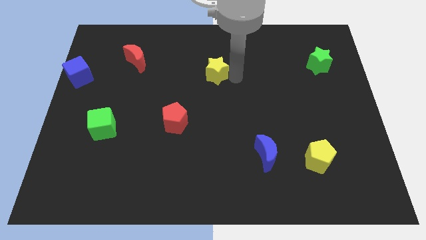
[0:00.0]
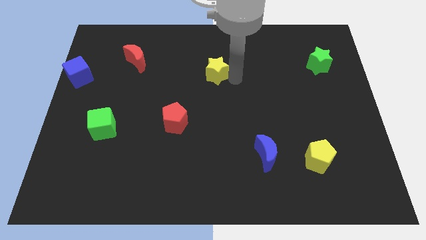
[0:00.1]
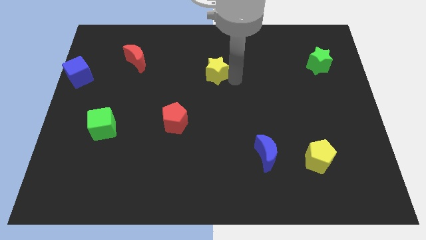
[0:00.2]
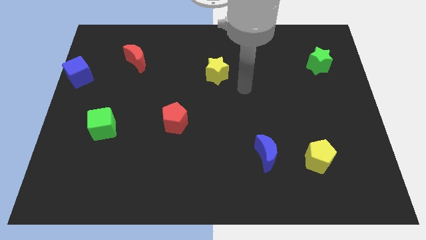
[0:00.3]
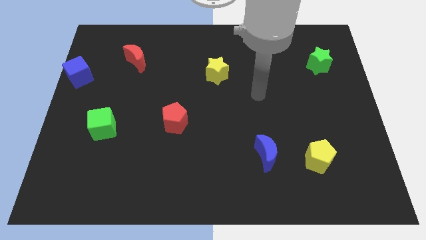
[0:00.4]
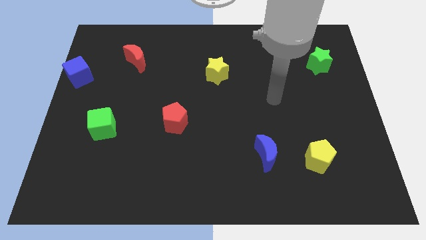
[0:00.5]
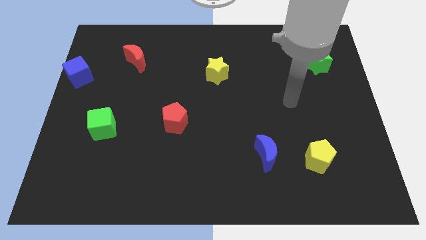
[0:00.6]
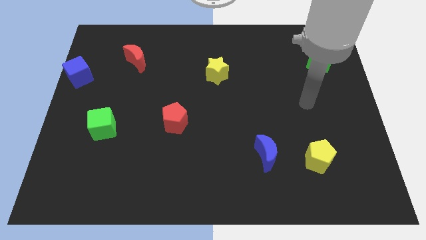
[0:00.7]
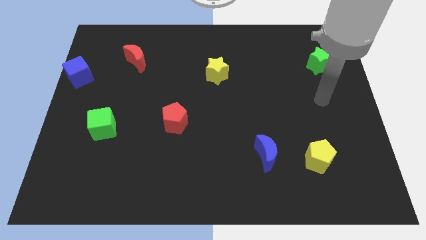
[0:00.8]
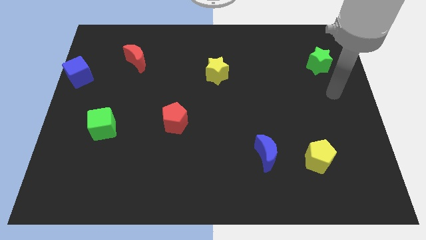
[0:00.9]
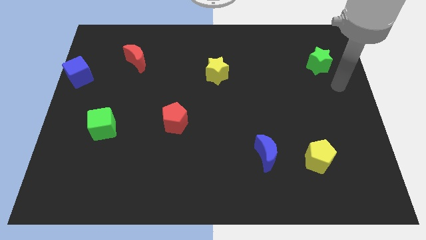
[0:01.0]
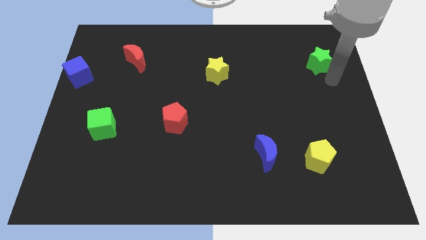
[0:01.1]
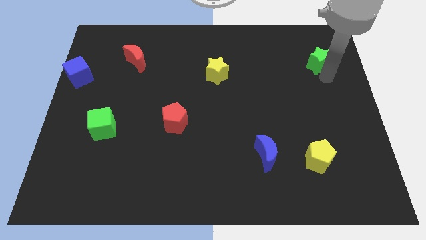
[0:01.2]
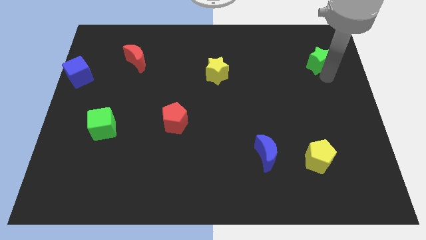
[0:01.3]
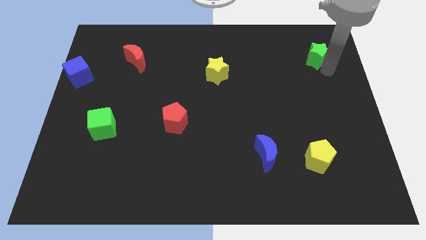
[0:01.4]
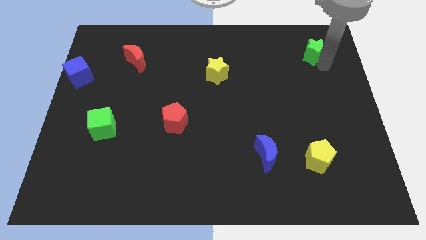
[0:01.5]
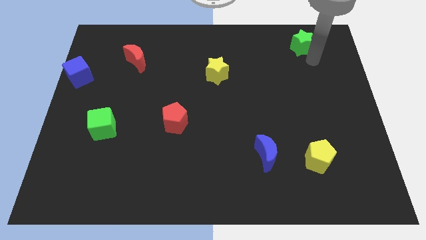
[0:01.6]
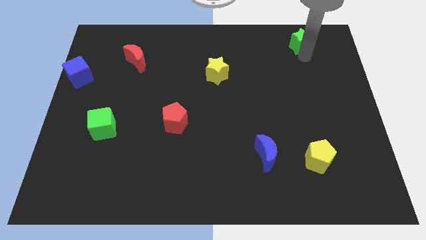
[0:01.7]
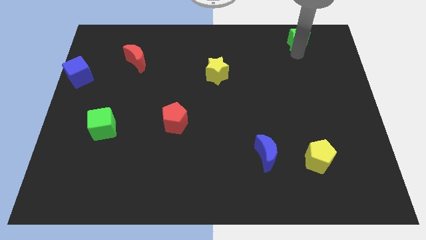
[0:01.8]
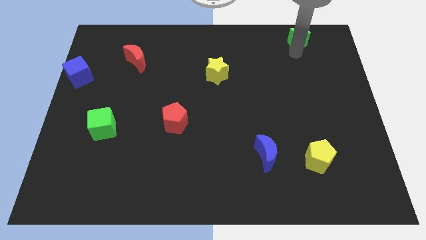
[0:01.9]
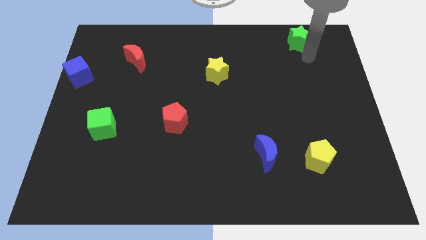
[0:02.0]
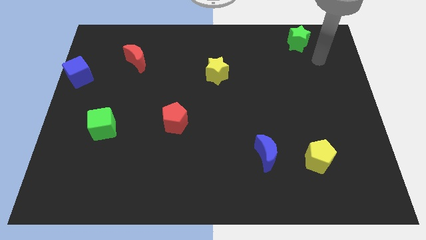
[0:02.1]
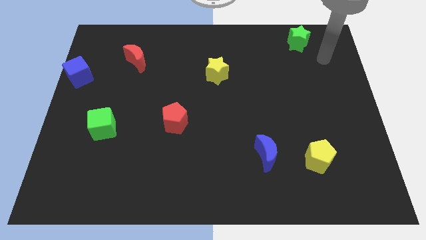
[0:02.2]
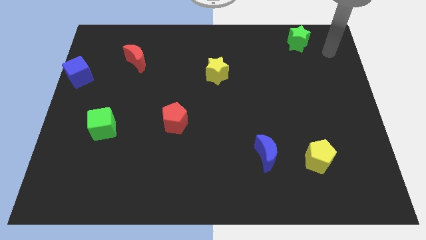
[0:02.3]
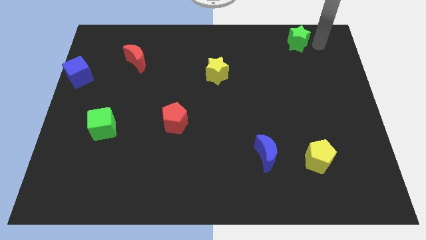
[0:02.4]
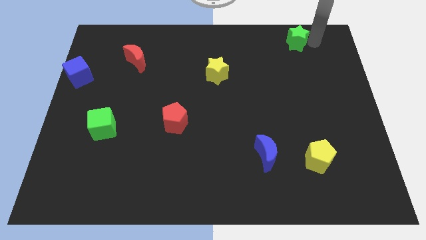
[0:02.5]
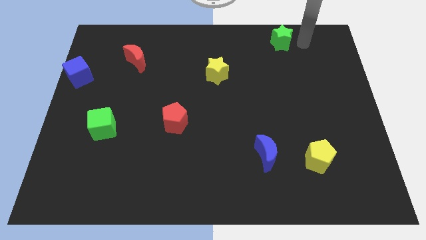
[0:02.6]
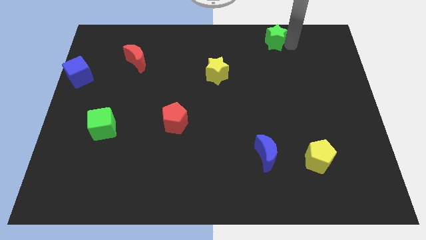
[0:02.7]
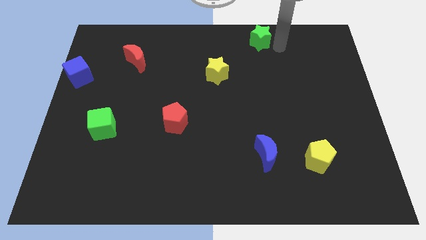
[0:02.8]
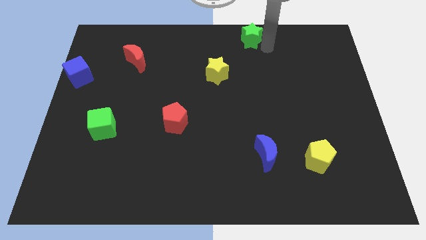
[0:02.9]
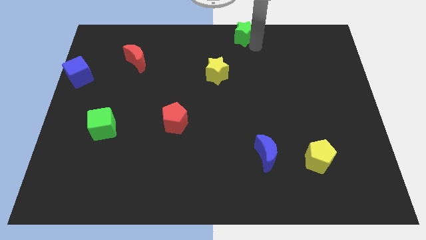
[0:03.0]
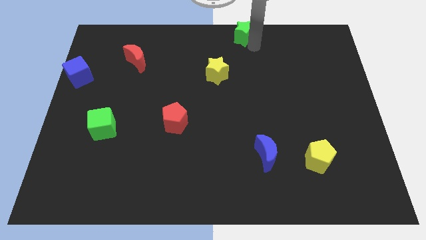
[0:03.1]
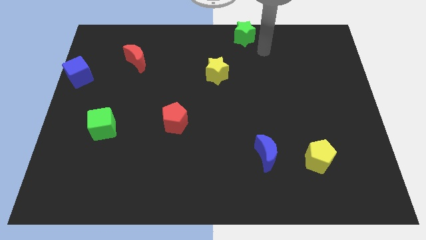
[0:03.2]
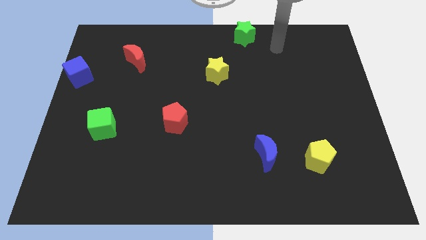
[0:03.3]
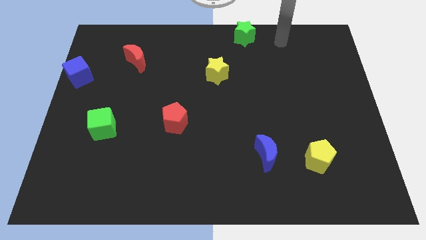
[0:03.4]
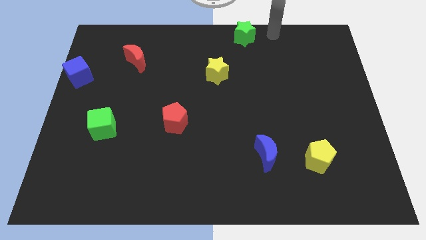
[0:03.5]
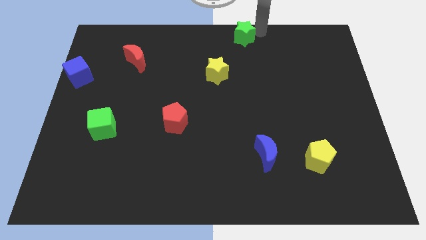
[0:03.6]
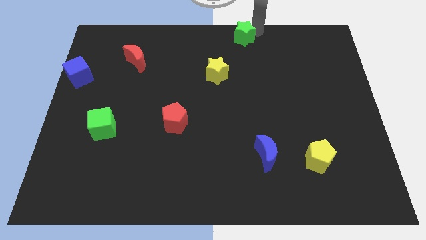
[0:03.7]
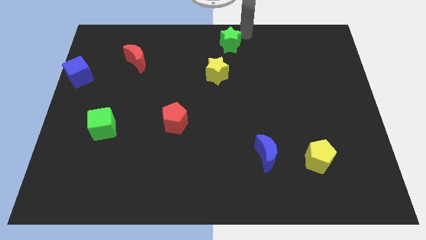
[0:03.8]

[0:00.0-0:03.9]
move the green star to the top right of yellow star

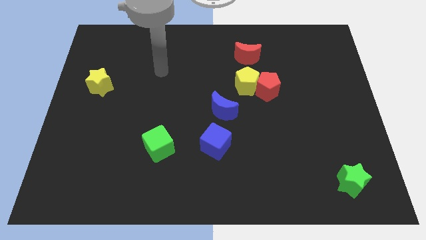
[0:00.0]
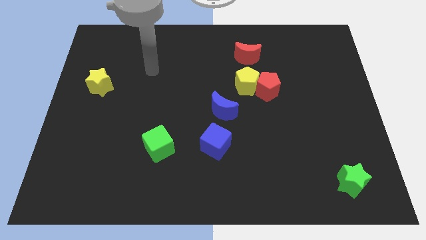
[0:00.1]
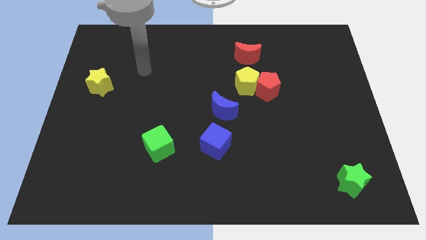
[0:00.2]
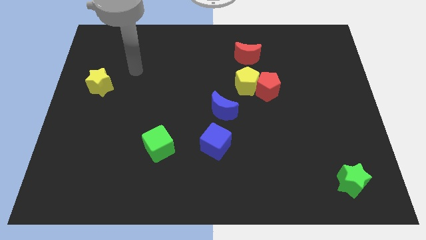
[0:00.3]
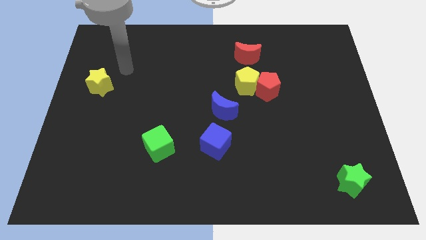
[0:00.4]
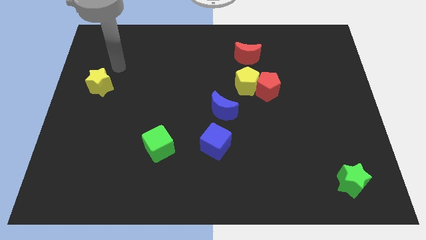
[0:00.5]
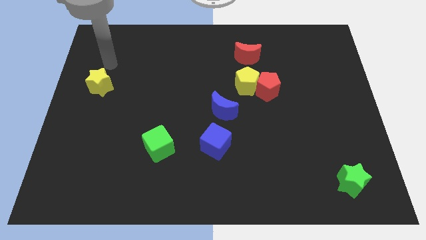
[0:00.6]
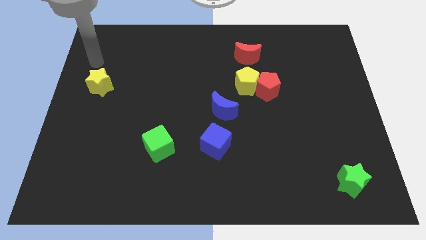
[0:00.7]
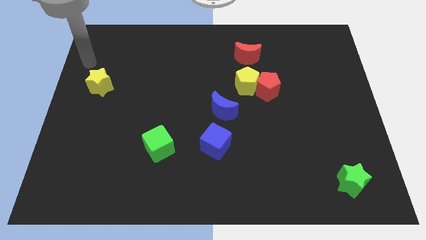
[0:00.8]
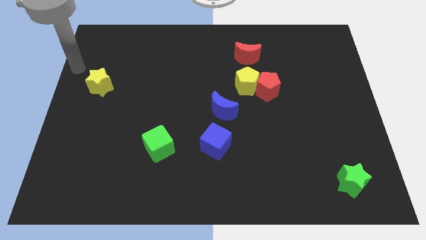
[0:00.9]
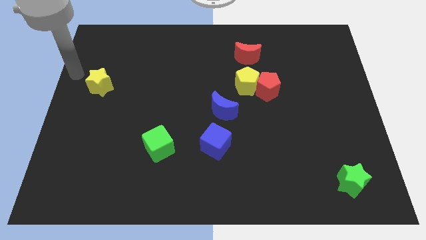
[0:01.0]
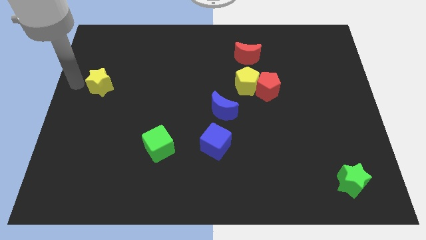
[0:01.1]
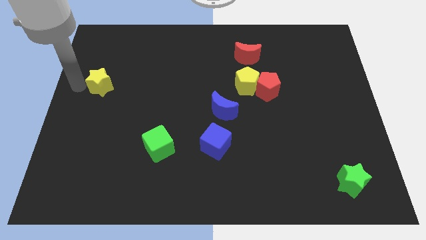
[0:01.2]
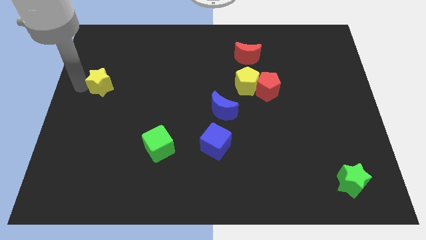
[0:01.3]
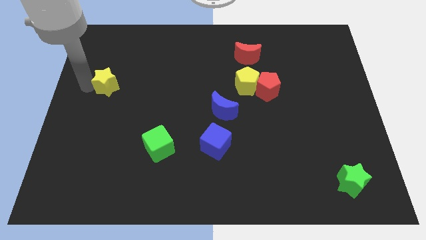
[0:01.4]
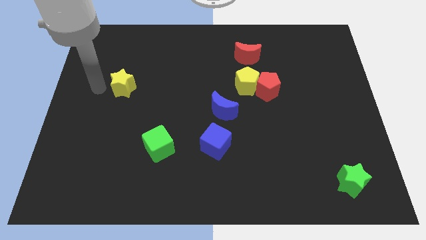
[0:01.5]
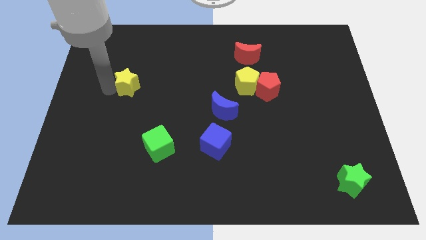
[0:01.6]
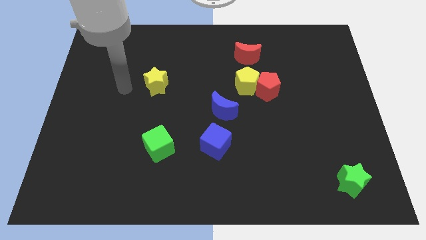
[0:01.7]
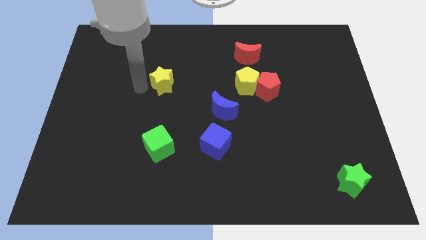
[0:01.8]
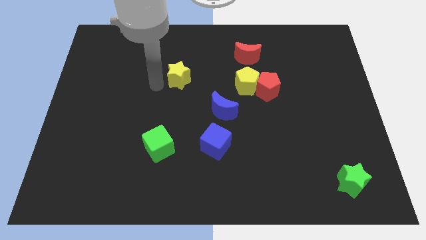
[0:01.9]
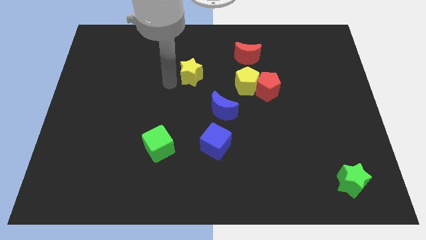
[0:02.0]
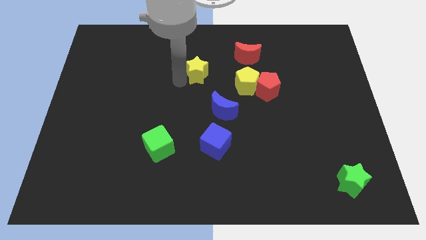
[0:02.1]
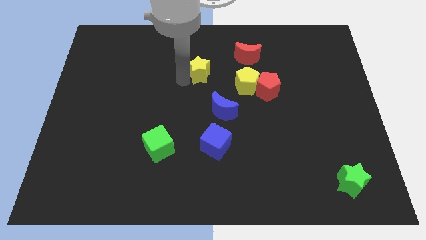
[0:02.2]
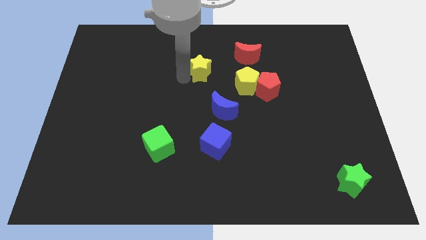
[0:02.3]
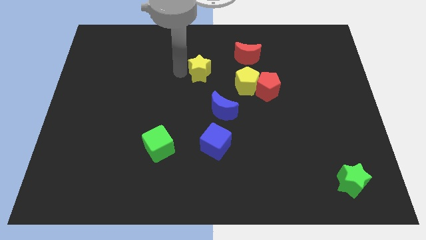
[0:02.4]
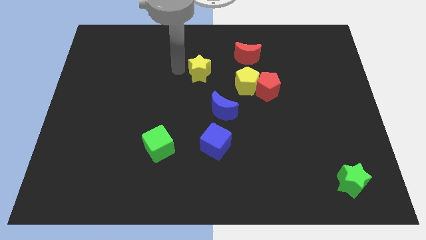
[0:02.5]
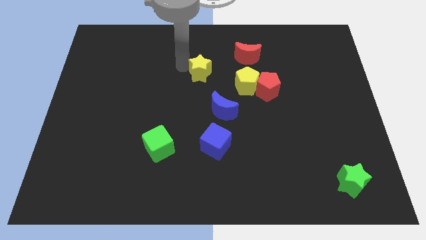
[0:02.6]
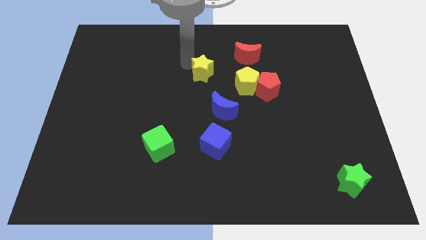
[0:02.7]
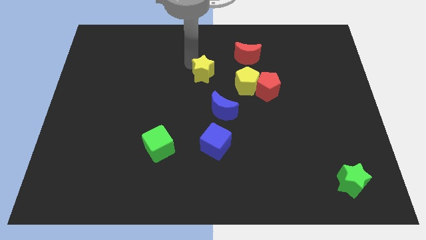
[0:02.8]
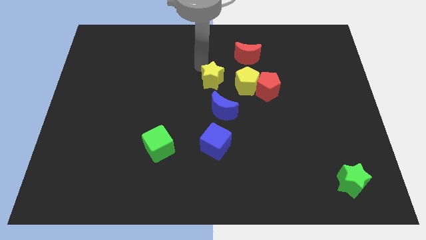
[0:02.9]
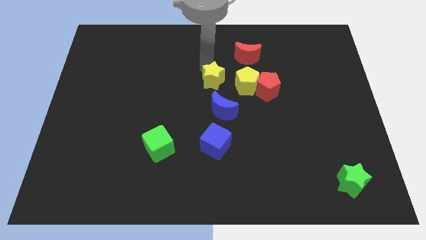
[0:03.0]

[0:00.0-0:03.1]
push the yellow star towards the center of the board

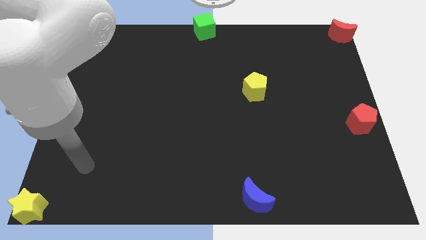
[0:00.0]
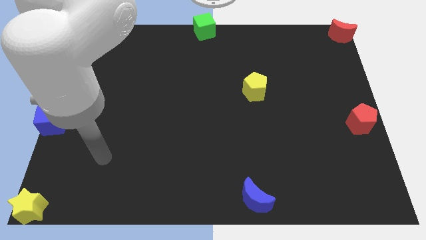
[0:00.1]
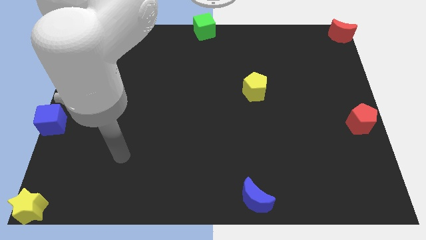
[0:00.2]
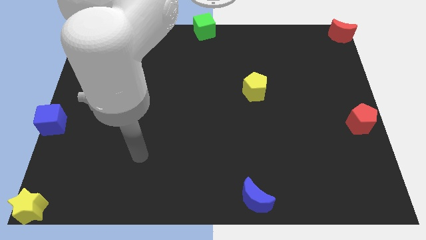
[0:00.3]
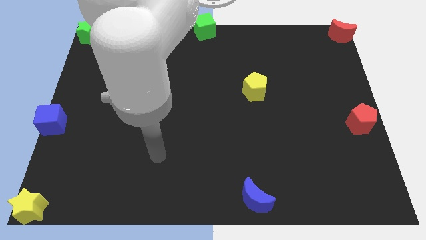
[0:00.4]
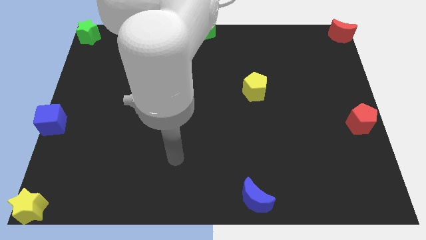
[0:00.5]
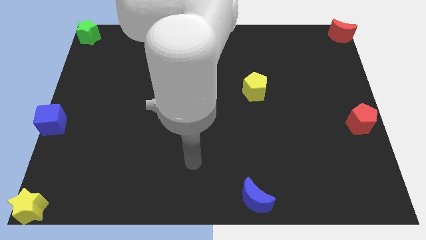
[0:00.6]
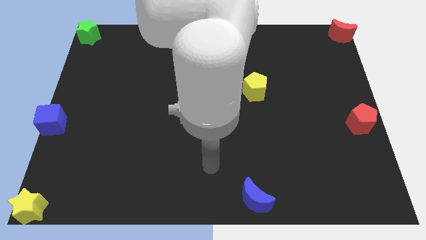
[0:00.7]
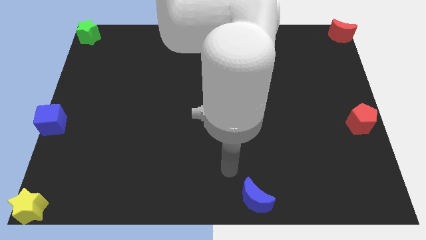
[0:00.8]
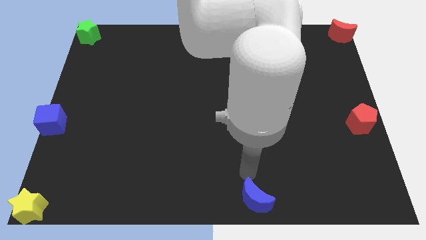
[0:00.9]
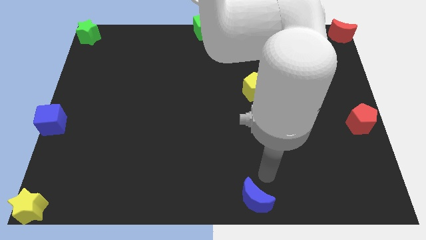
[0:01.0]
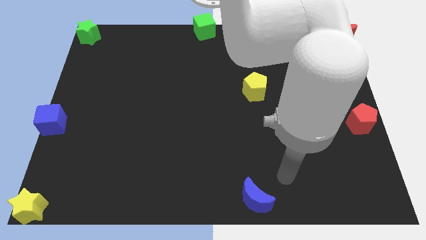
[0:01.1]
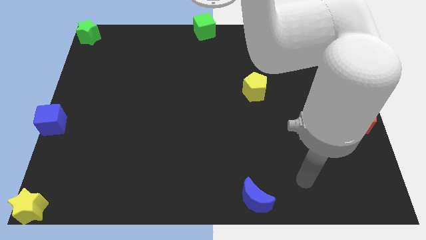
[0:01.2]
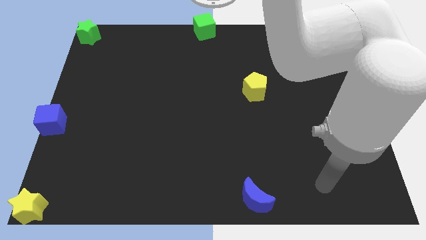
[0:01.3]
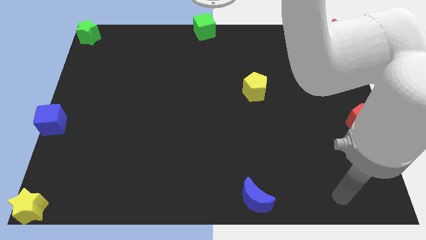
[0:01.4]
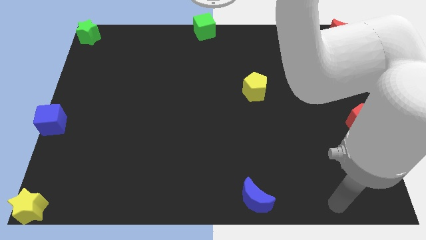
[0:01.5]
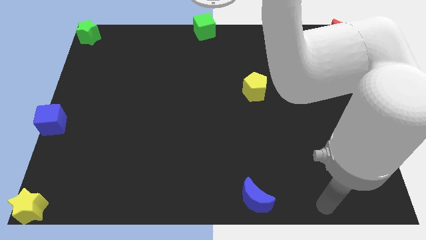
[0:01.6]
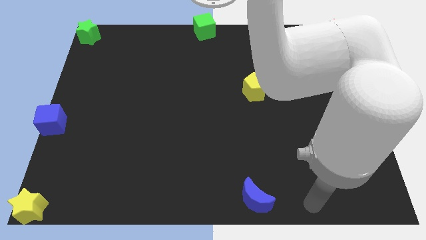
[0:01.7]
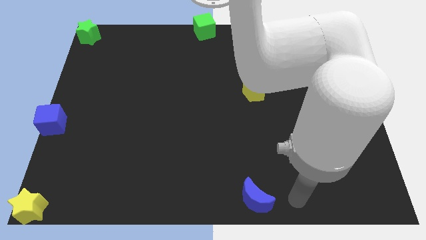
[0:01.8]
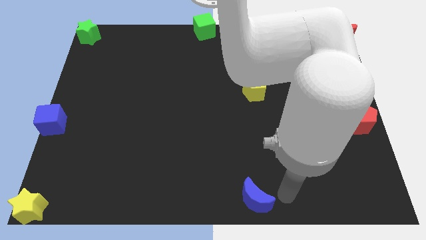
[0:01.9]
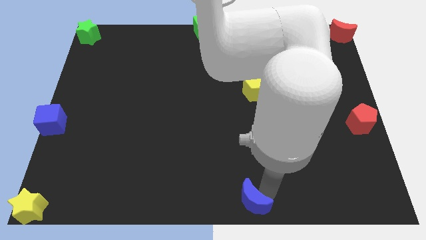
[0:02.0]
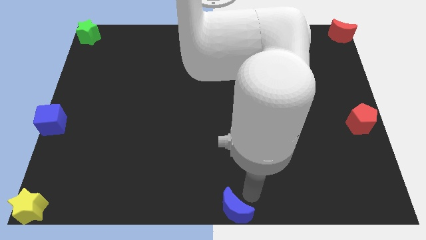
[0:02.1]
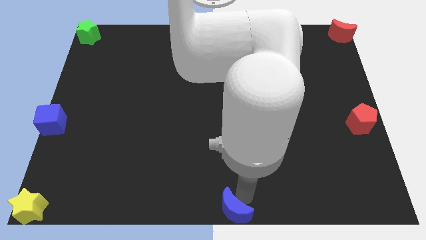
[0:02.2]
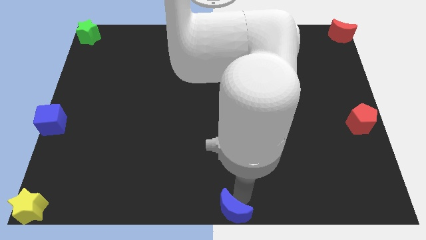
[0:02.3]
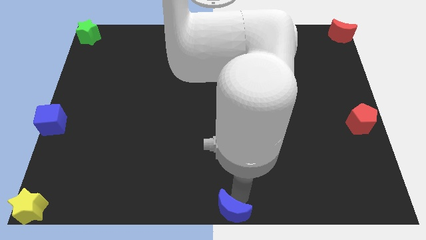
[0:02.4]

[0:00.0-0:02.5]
move the blue crescent to the bottom center of the board
